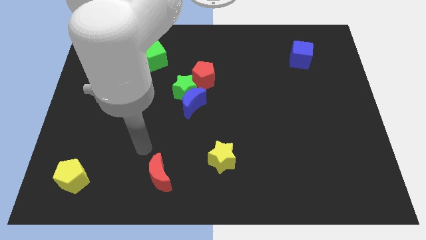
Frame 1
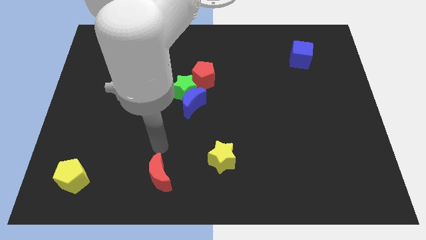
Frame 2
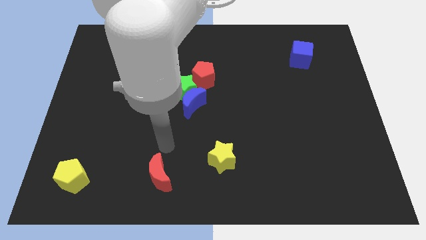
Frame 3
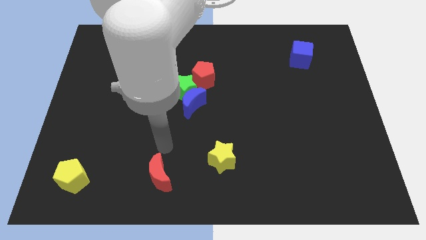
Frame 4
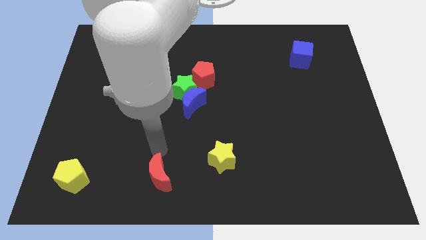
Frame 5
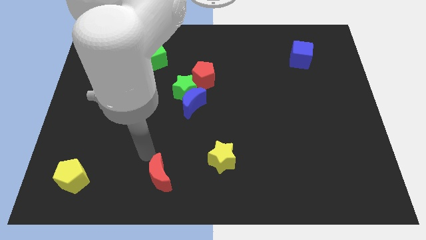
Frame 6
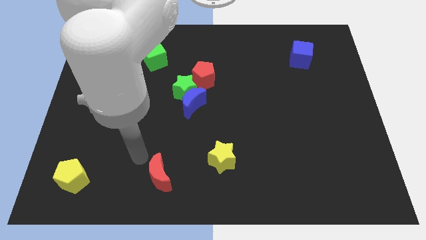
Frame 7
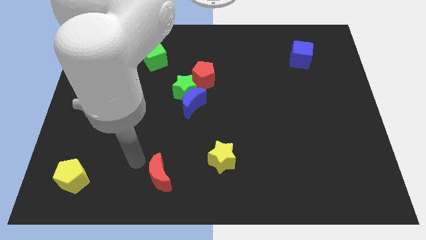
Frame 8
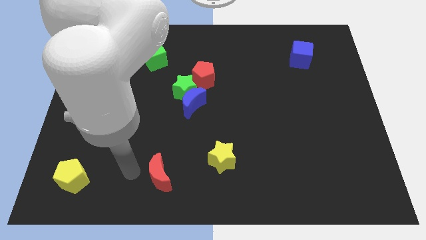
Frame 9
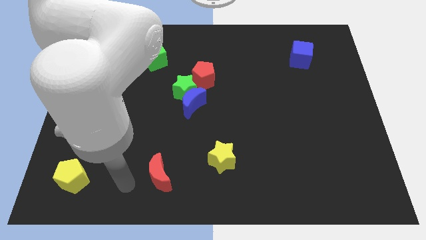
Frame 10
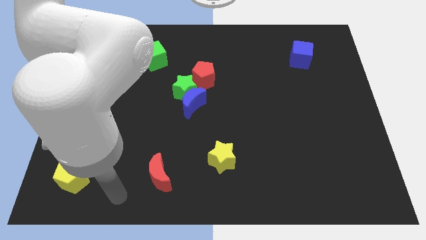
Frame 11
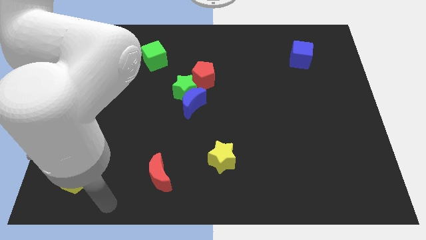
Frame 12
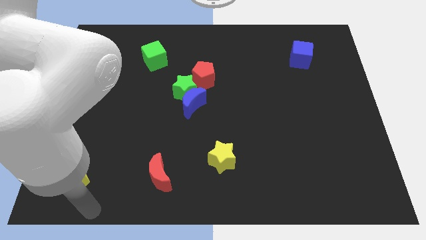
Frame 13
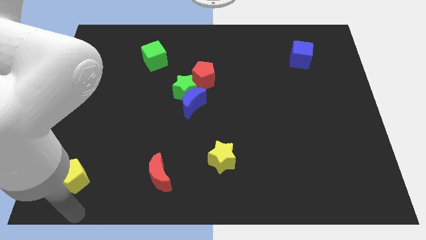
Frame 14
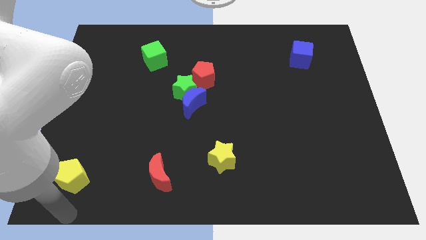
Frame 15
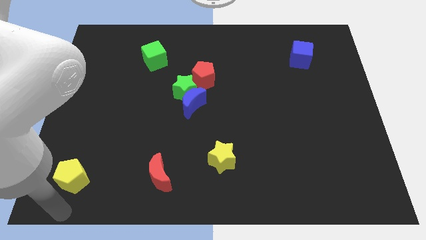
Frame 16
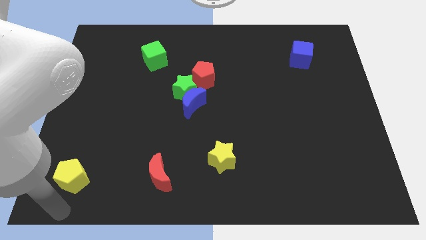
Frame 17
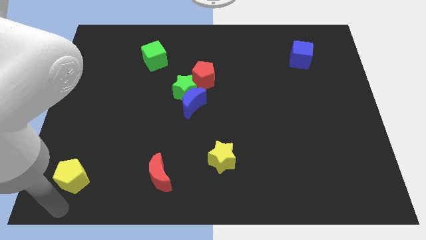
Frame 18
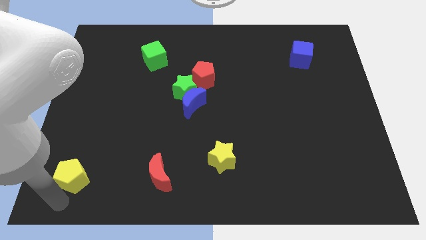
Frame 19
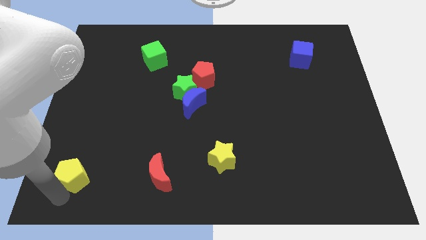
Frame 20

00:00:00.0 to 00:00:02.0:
place the arm down to the yellow pentagon

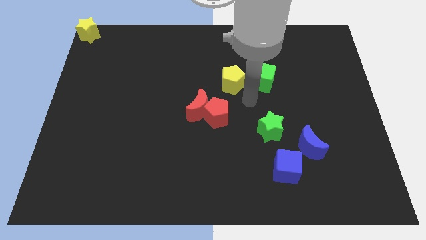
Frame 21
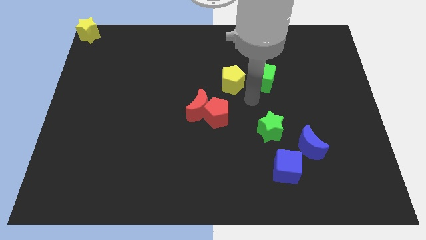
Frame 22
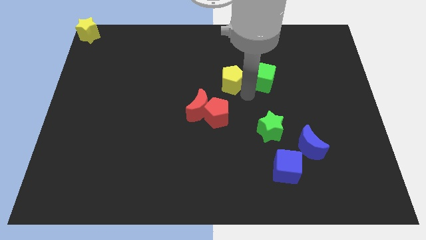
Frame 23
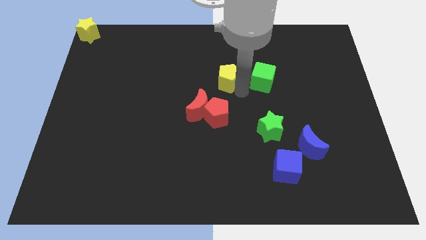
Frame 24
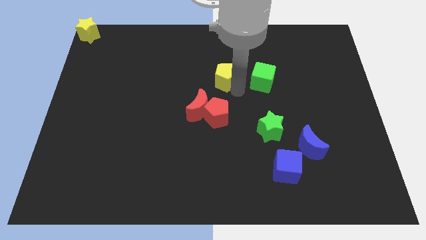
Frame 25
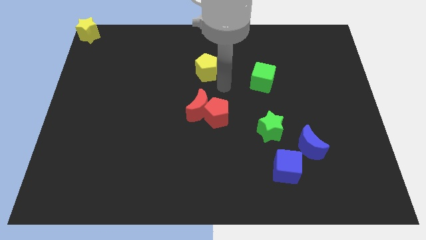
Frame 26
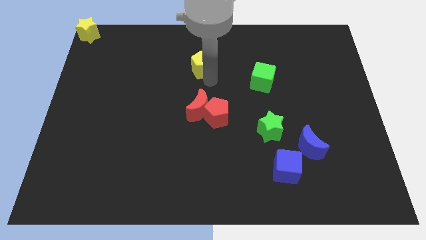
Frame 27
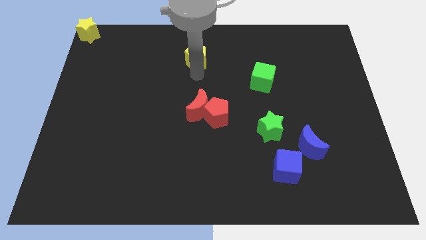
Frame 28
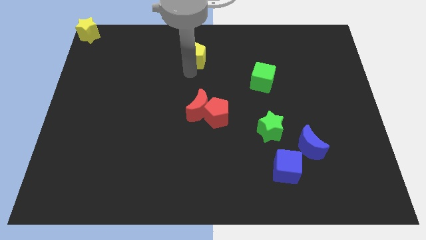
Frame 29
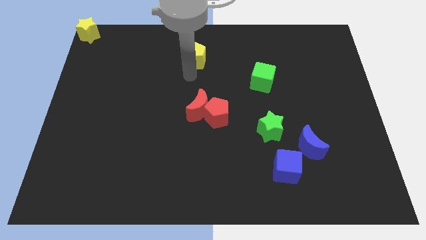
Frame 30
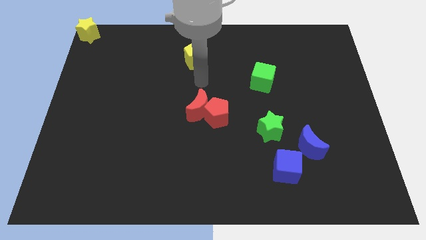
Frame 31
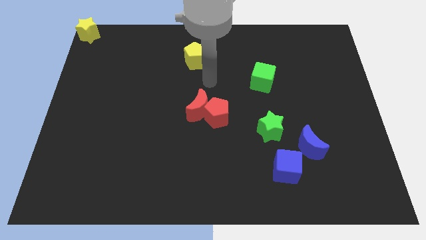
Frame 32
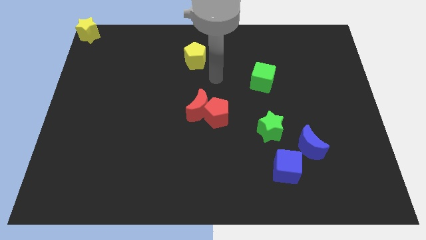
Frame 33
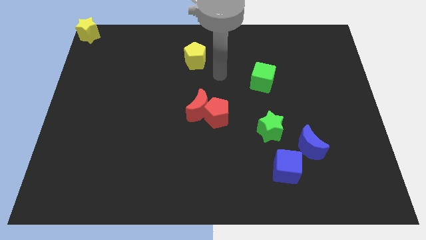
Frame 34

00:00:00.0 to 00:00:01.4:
push the yellow pentagon towards the top center of the board

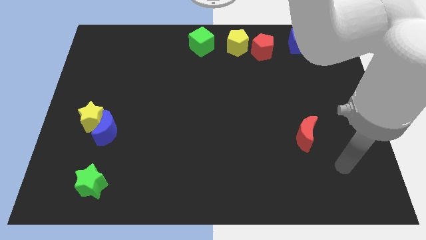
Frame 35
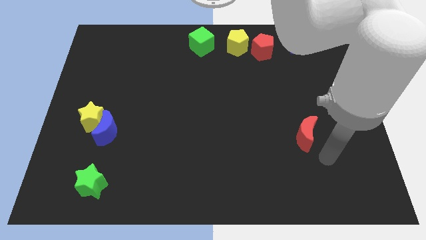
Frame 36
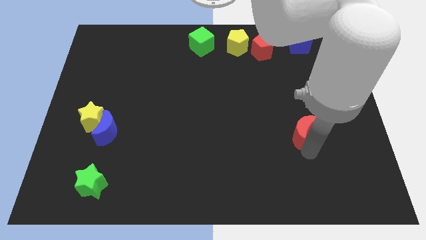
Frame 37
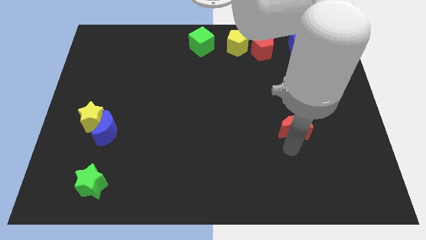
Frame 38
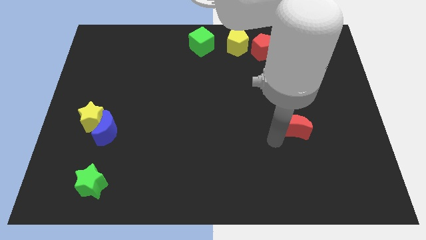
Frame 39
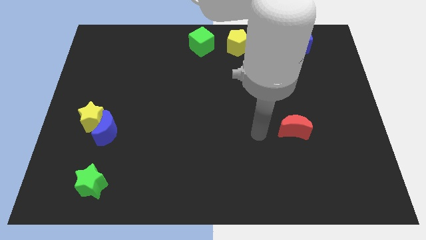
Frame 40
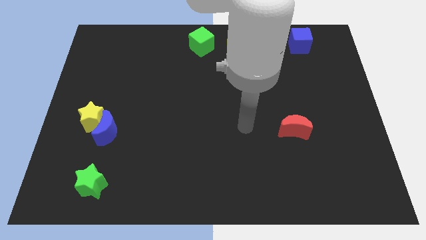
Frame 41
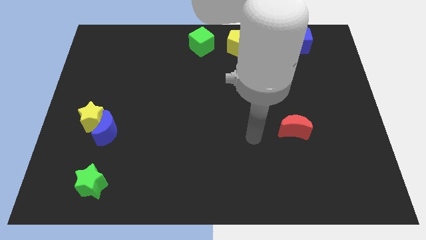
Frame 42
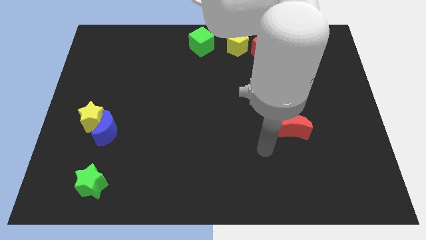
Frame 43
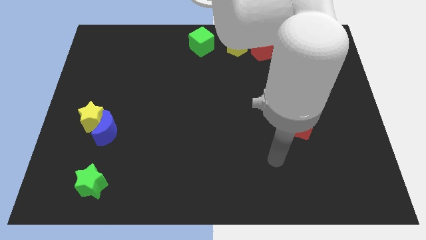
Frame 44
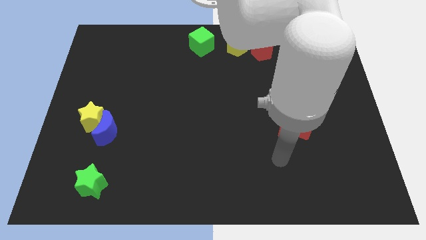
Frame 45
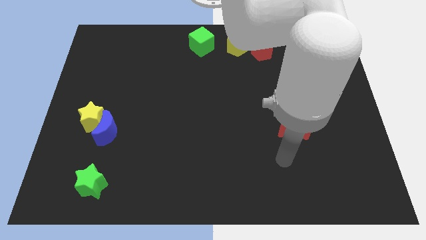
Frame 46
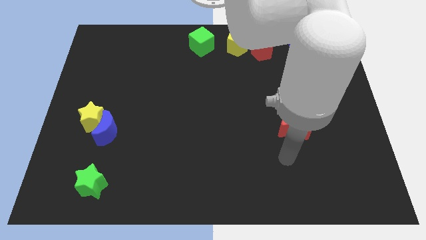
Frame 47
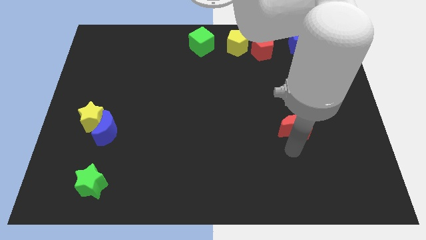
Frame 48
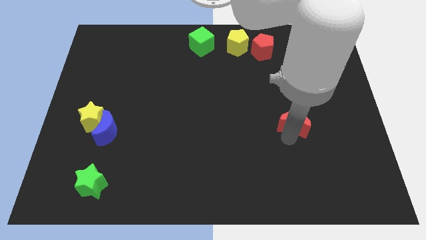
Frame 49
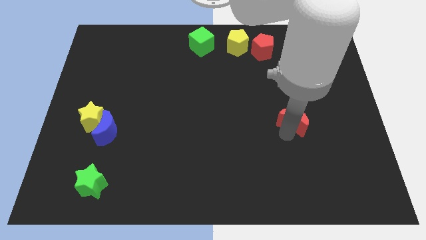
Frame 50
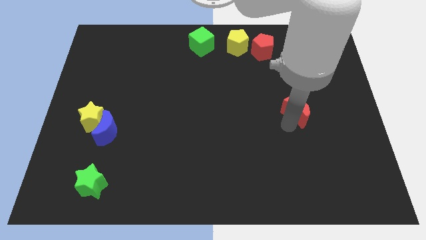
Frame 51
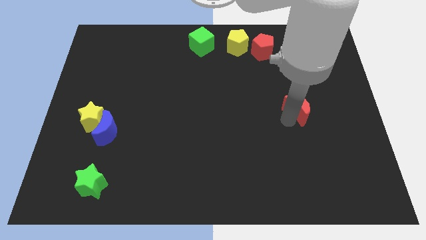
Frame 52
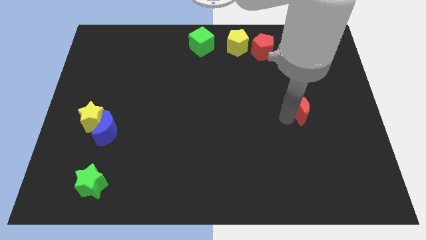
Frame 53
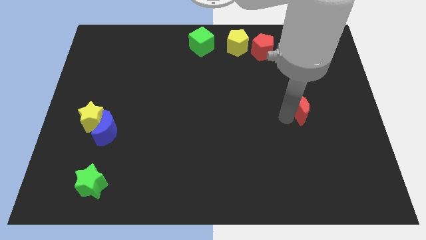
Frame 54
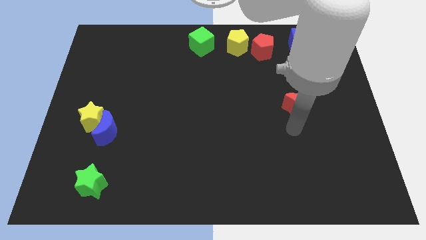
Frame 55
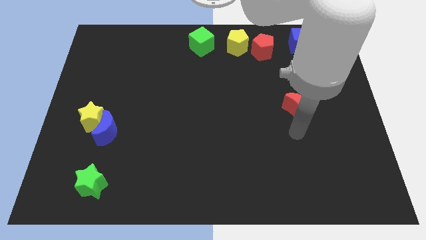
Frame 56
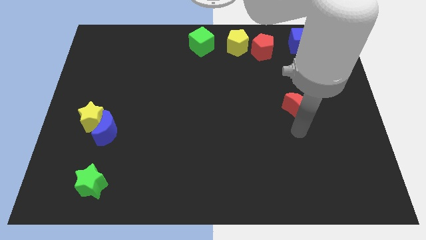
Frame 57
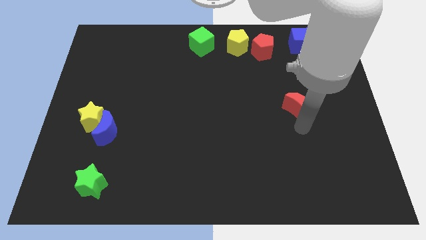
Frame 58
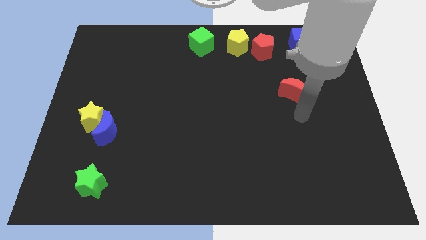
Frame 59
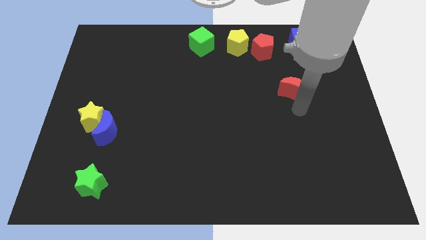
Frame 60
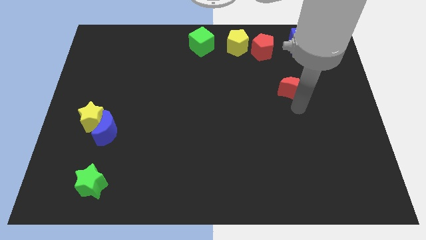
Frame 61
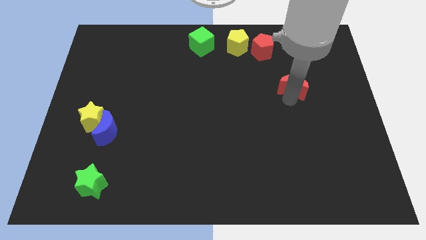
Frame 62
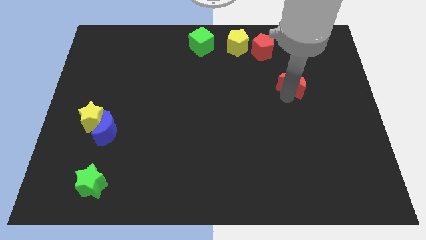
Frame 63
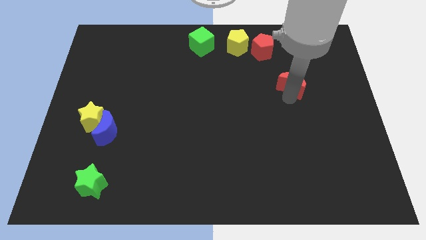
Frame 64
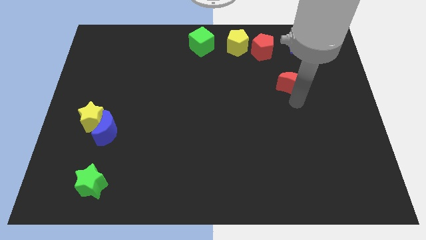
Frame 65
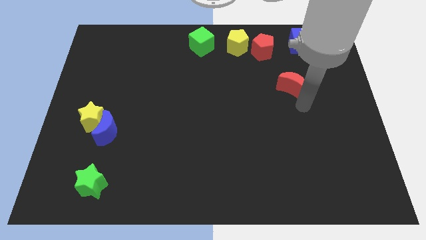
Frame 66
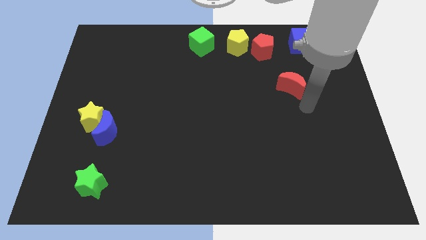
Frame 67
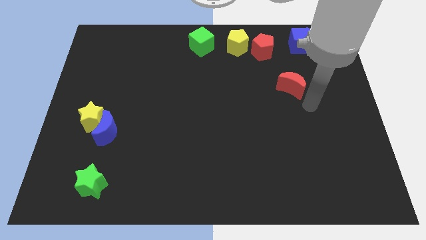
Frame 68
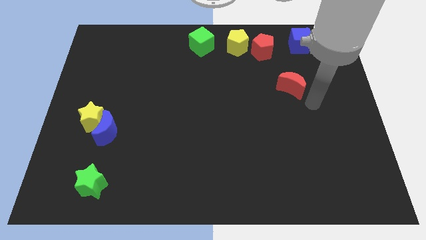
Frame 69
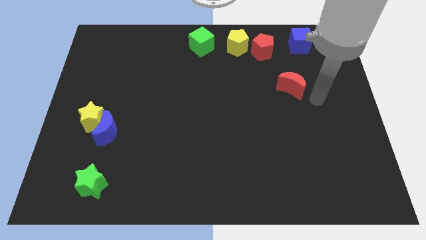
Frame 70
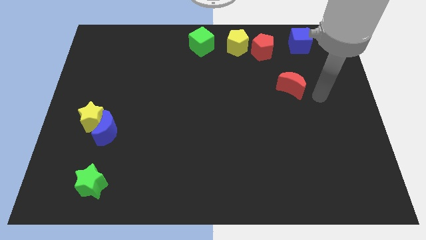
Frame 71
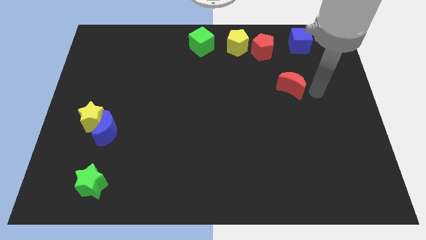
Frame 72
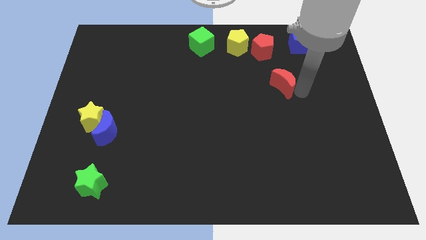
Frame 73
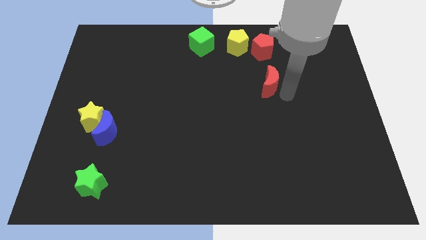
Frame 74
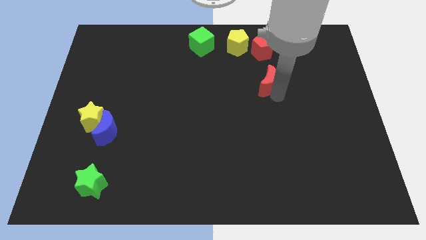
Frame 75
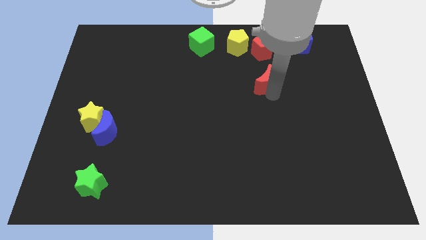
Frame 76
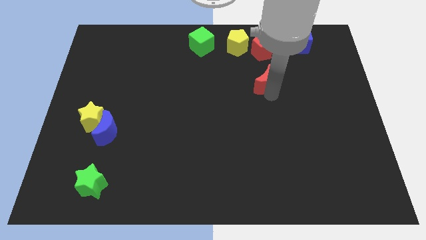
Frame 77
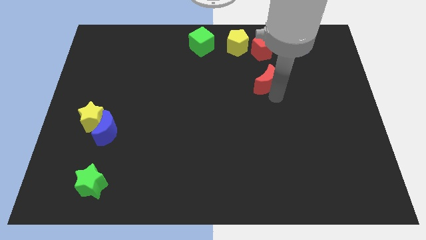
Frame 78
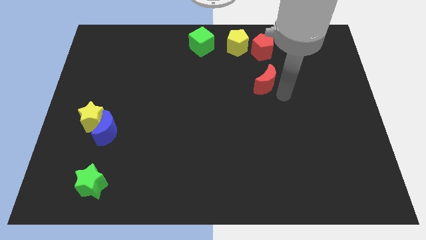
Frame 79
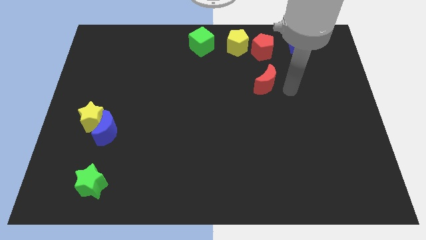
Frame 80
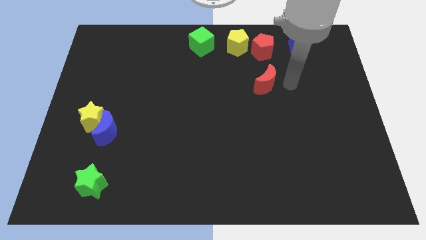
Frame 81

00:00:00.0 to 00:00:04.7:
push the red moon to the bottom side of the red pentagon

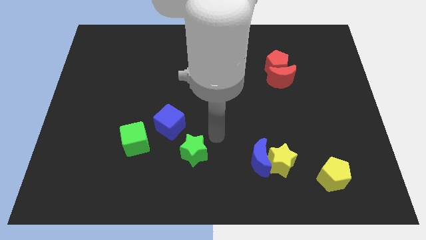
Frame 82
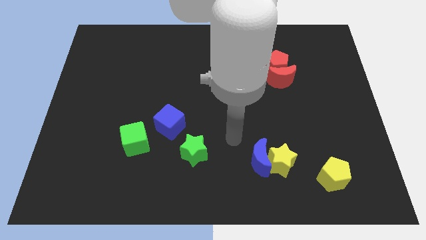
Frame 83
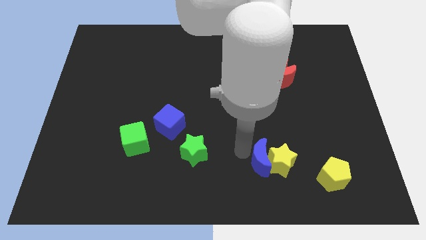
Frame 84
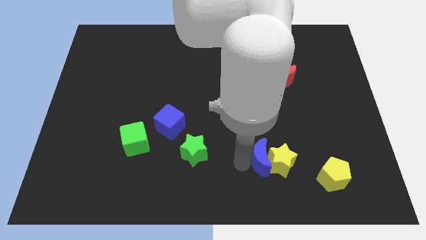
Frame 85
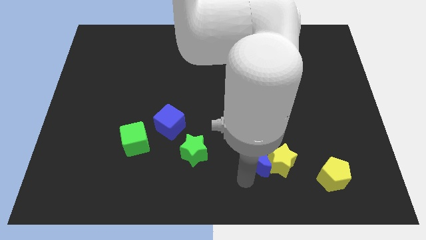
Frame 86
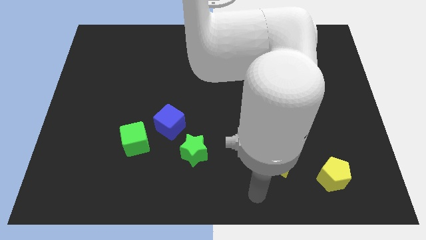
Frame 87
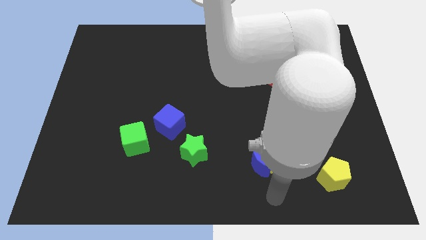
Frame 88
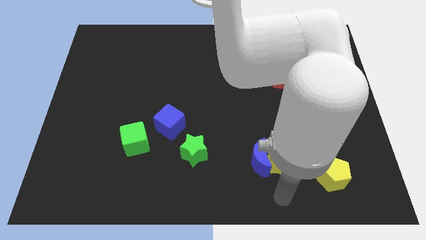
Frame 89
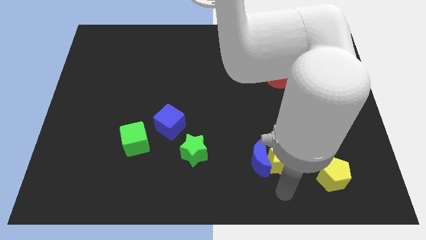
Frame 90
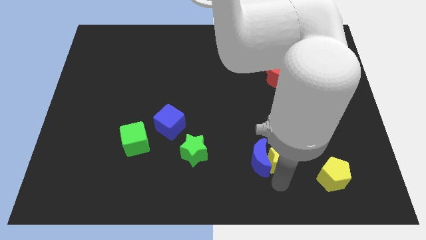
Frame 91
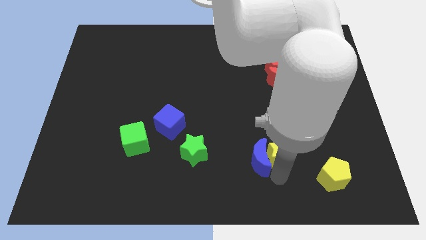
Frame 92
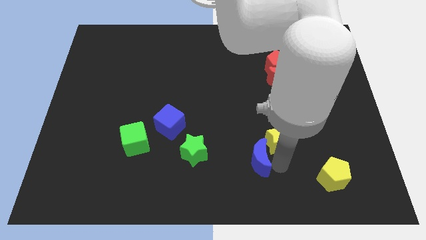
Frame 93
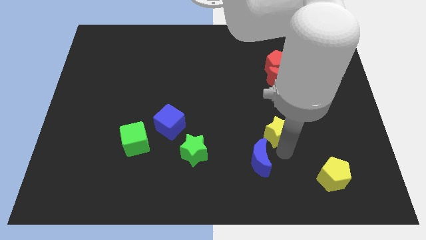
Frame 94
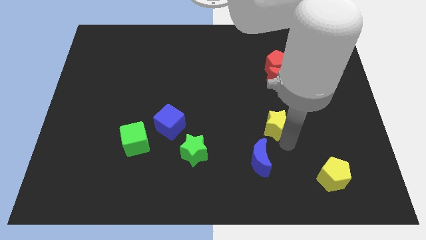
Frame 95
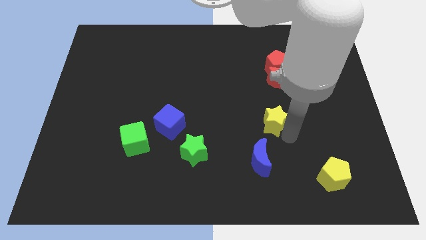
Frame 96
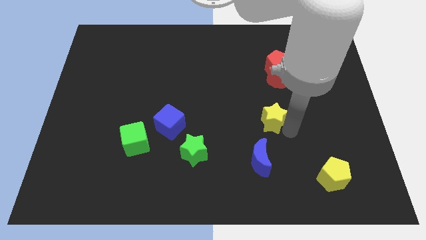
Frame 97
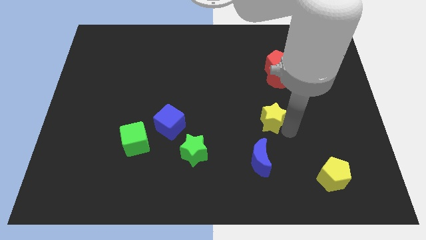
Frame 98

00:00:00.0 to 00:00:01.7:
separate the yellow star from the blue moon
